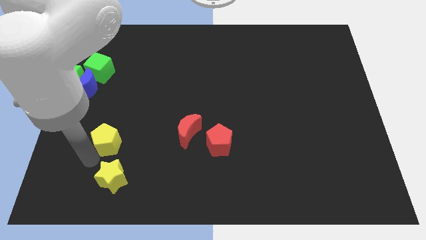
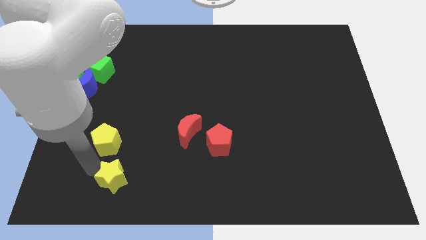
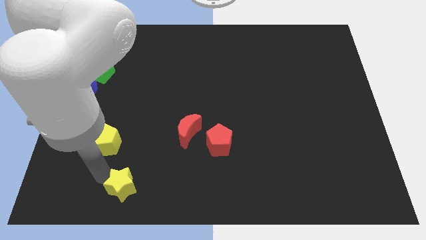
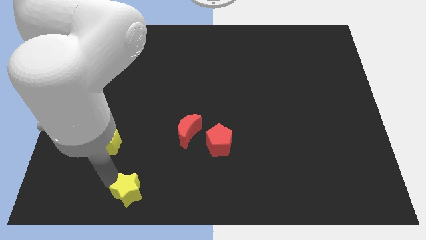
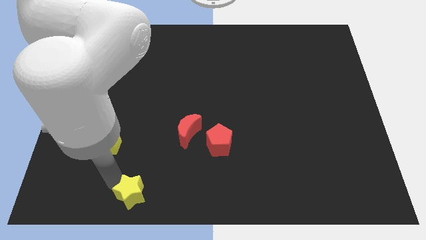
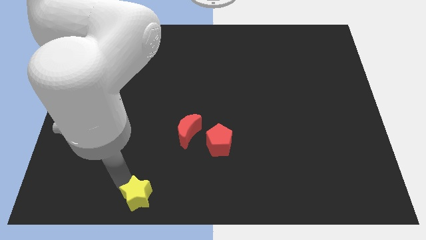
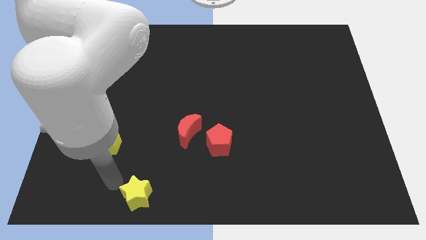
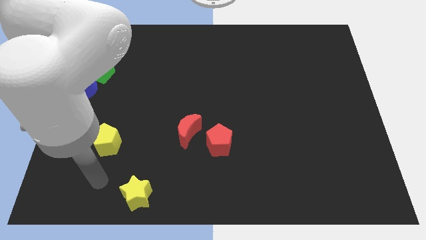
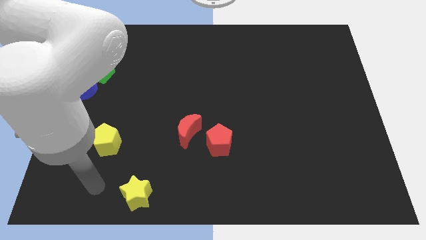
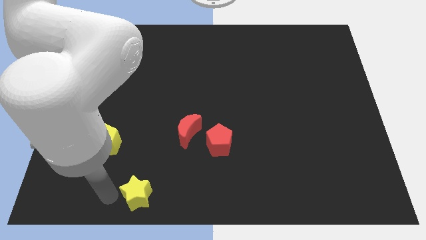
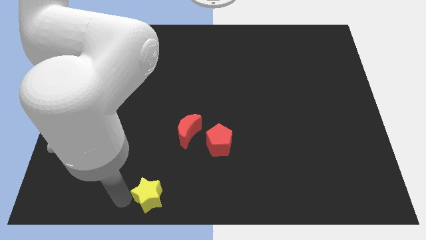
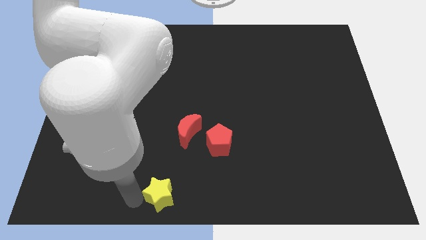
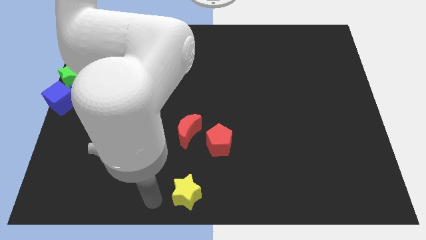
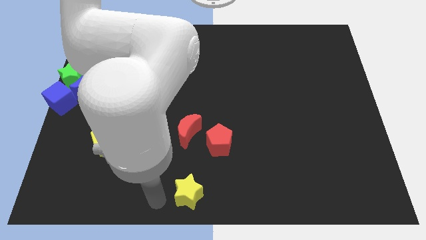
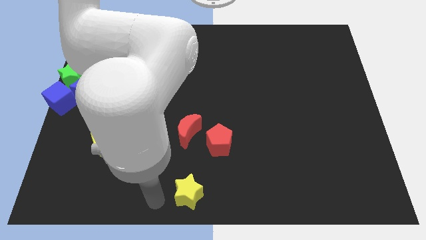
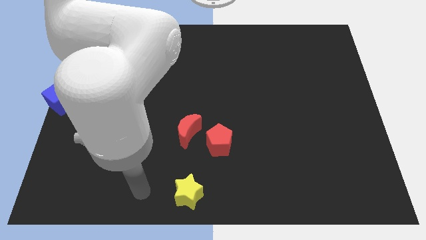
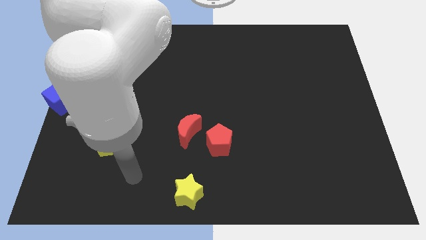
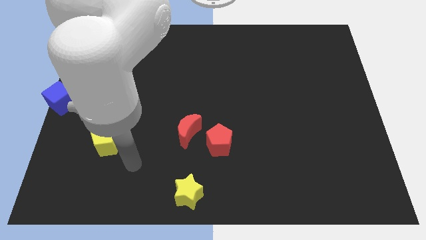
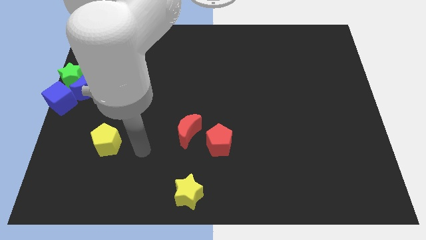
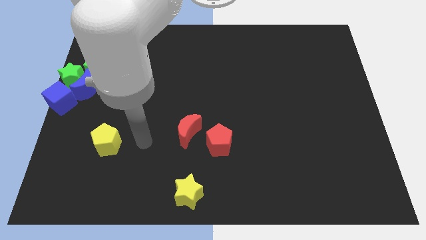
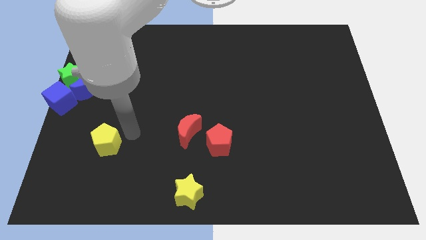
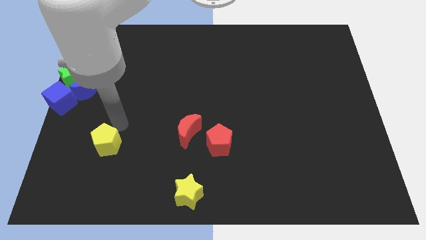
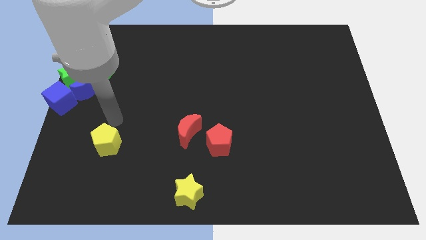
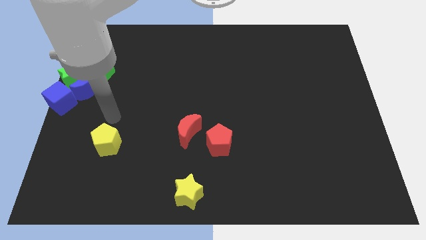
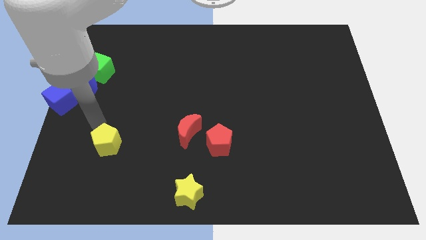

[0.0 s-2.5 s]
push the green star towards the bottom center of the board

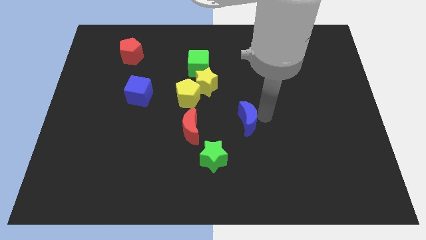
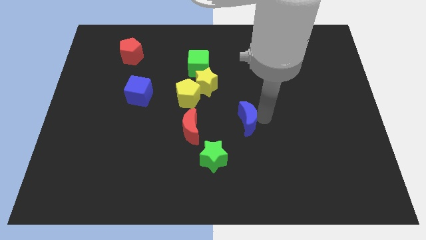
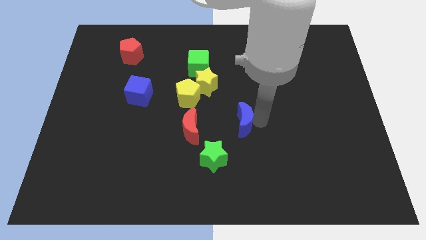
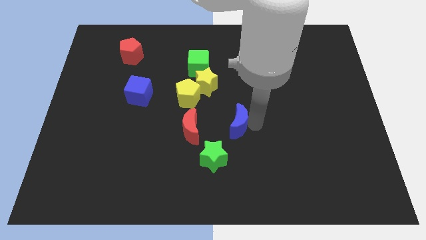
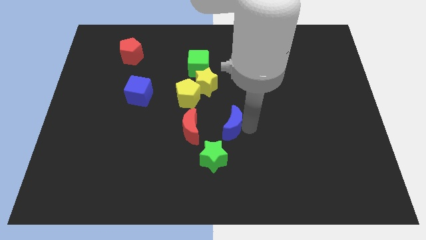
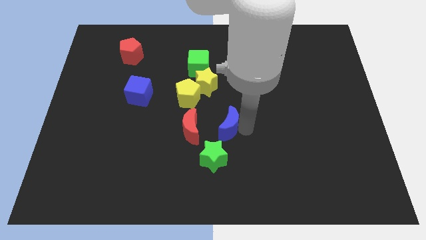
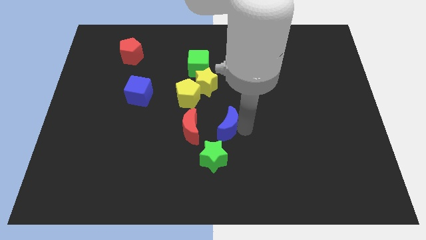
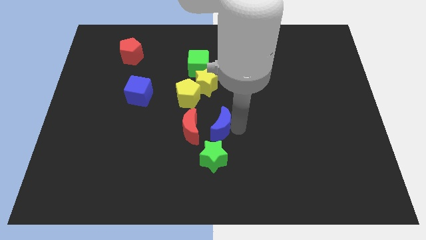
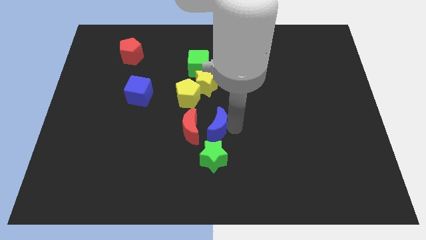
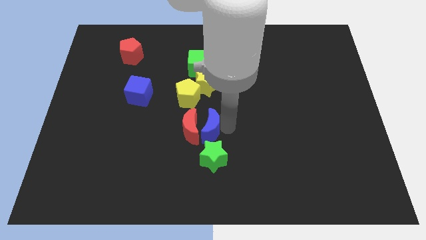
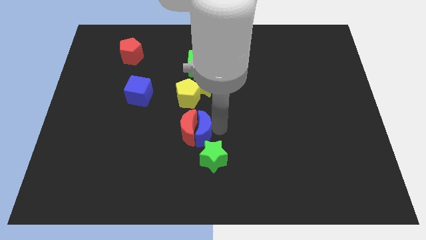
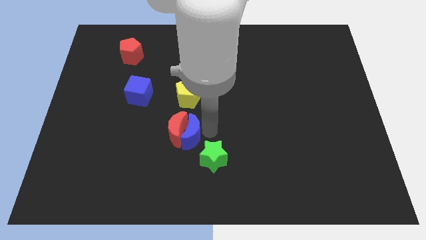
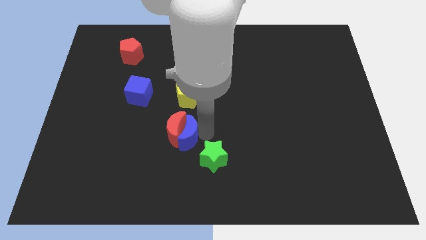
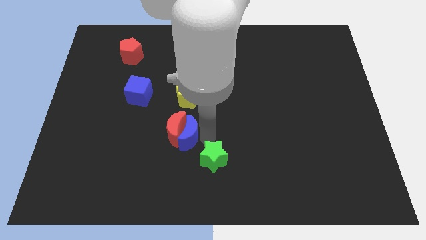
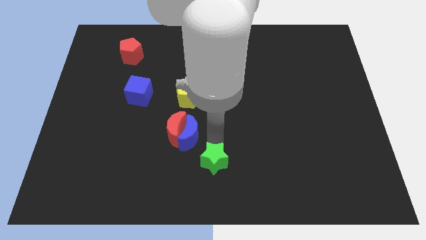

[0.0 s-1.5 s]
slide the blue moon into the red moon

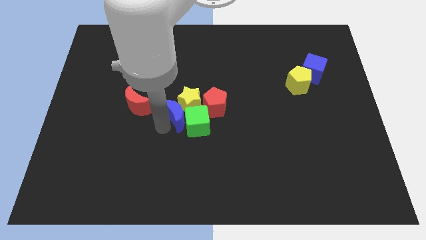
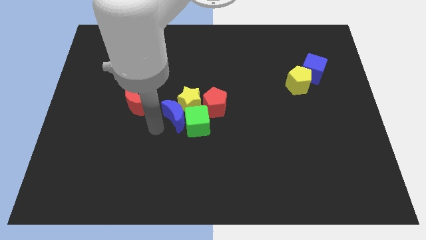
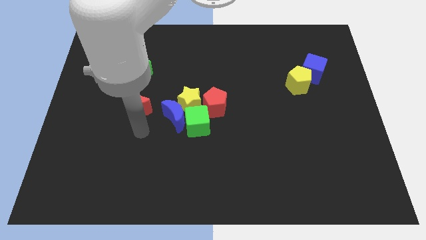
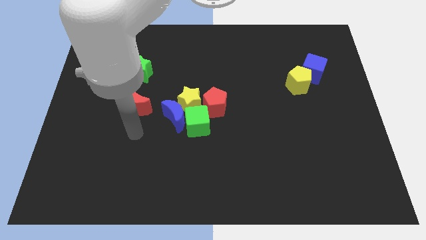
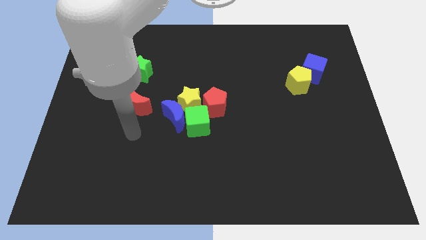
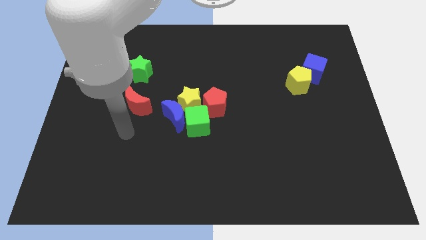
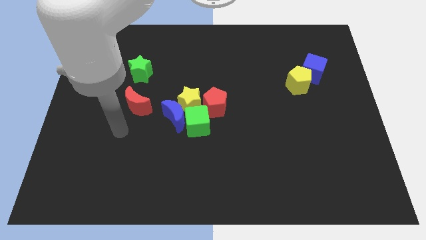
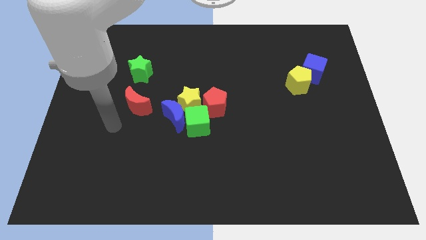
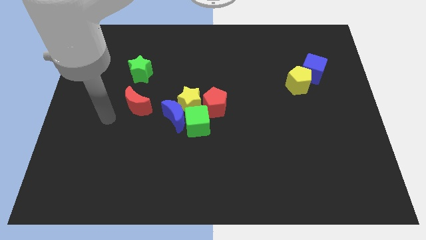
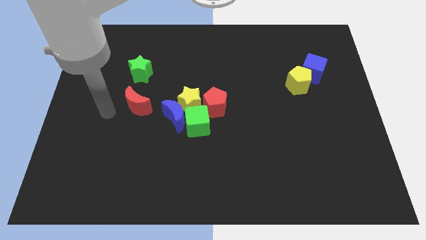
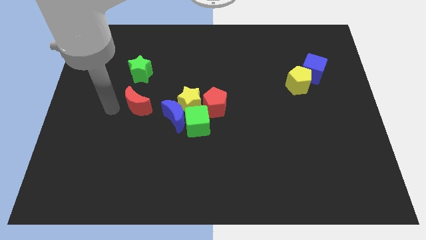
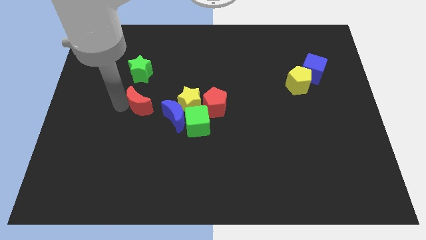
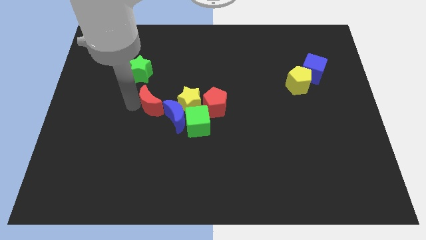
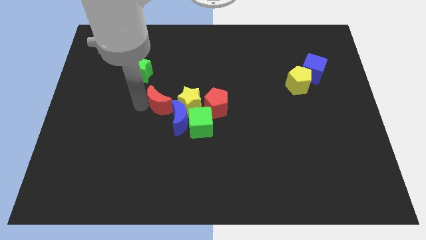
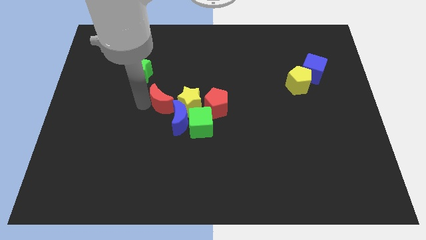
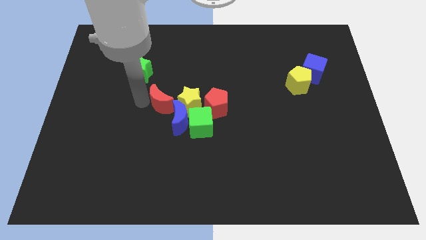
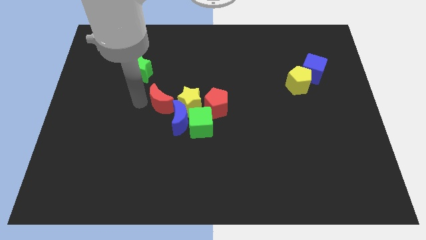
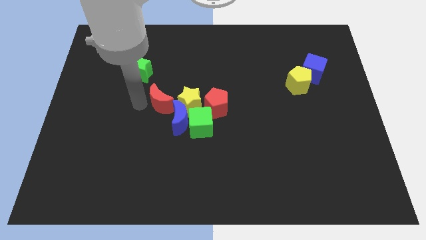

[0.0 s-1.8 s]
push the red moon into blue moon

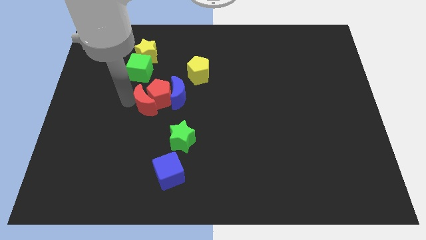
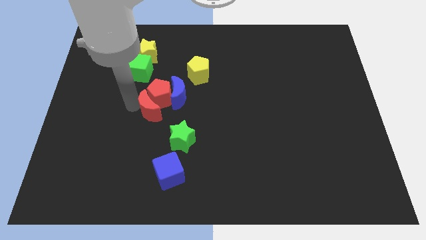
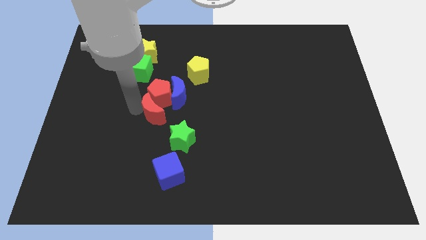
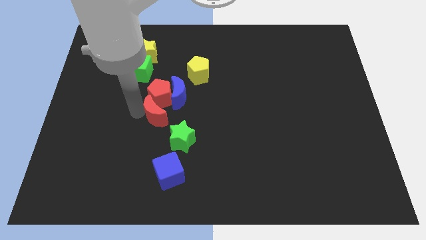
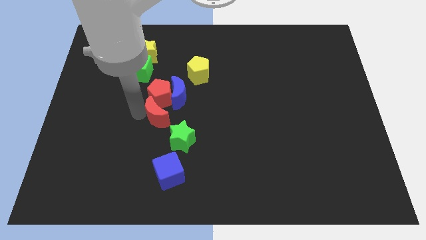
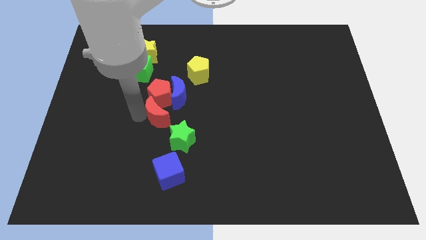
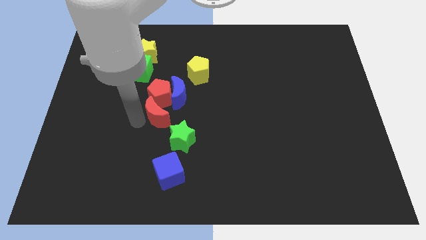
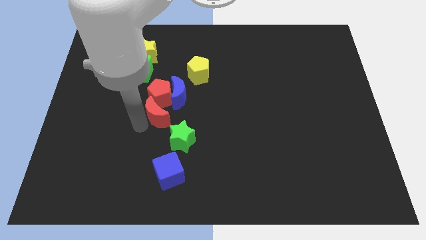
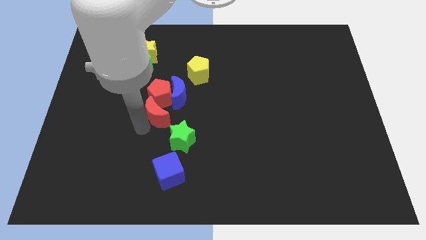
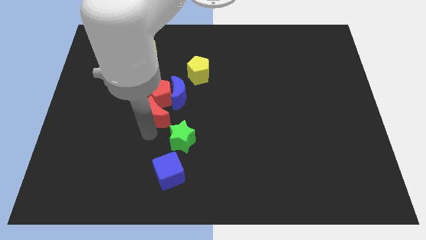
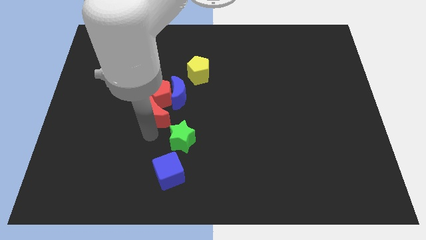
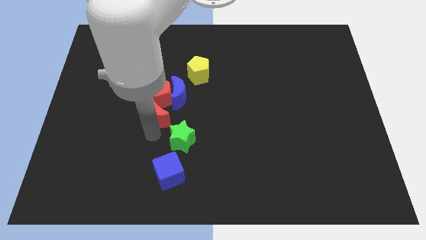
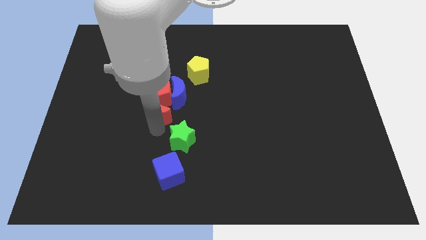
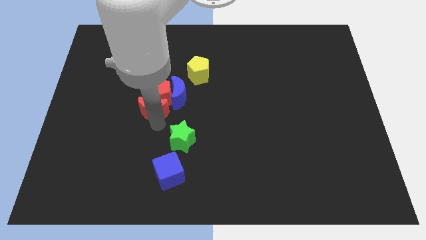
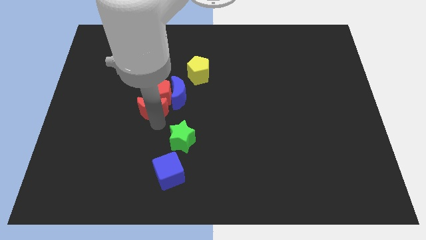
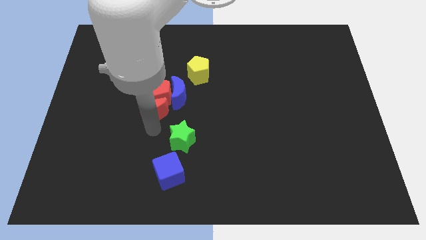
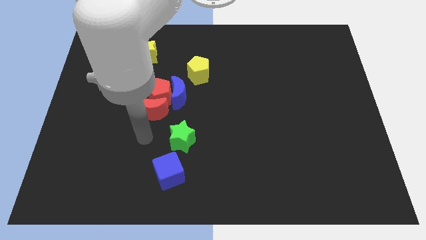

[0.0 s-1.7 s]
move the red crescent to the bottom of the red pentagon

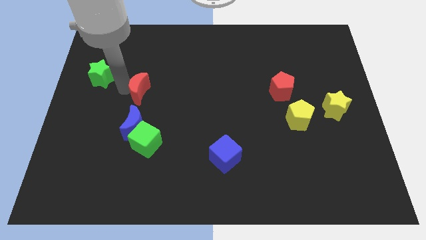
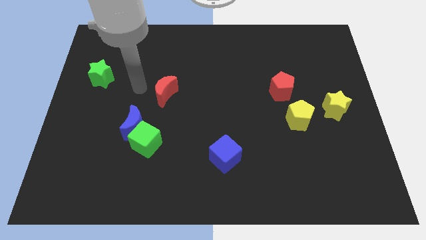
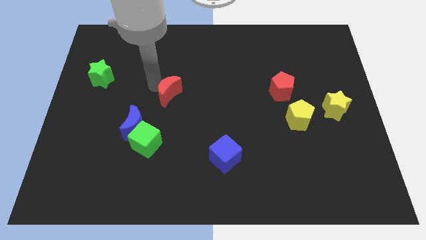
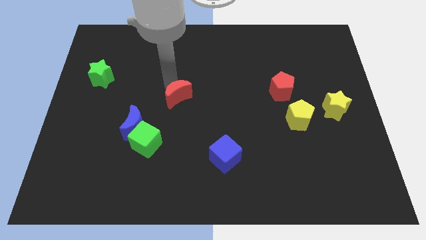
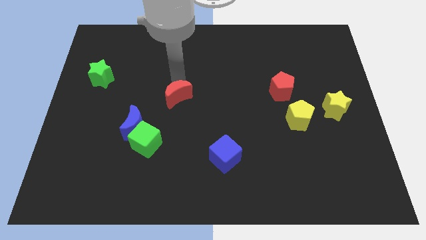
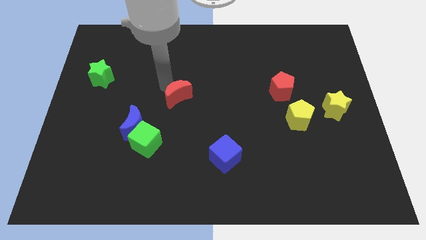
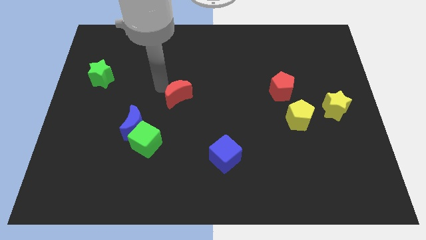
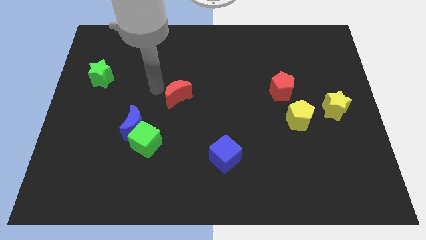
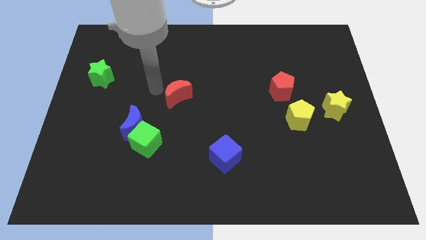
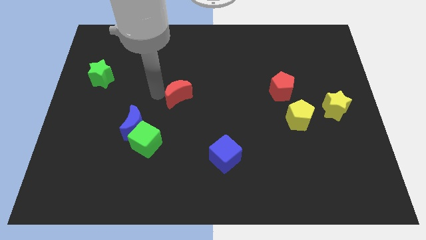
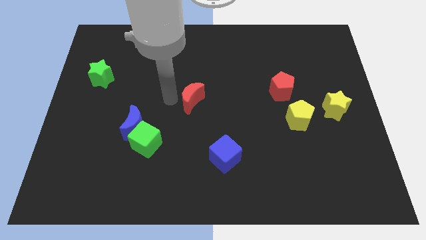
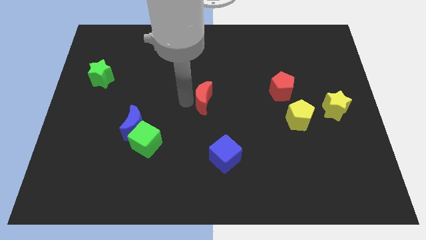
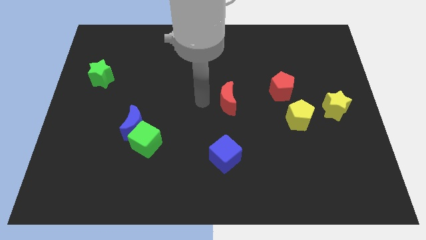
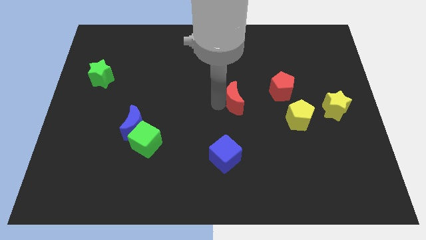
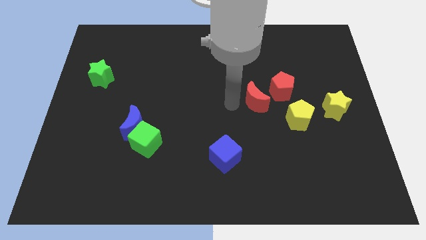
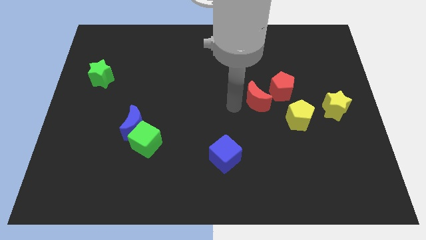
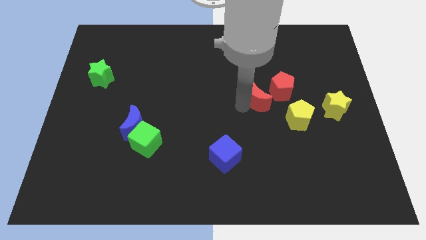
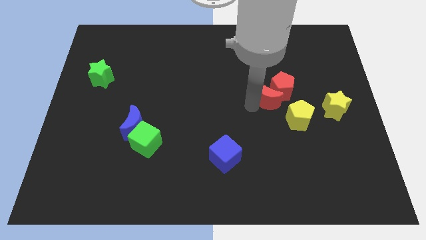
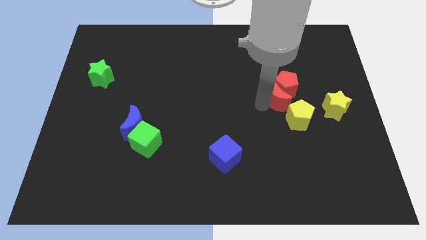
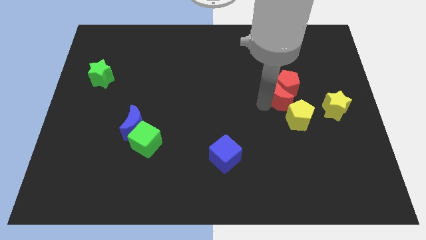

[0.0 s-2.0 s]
move the red moon into the red pentagon
